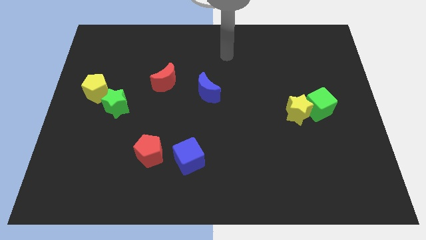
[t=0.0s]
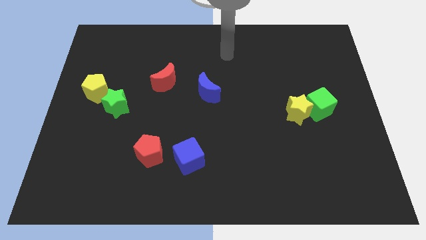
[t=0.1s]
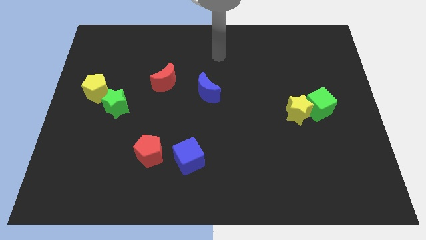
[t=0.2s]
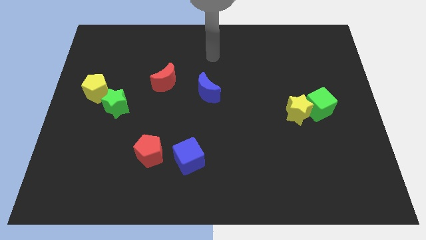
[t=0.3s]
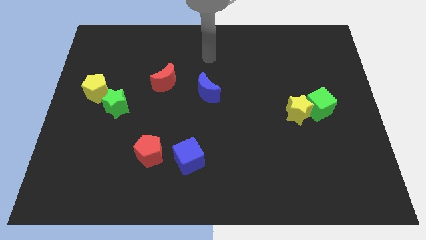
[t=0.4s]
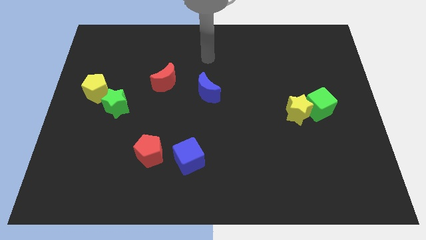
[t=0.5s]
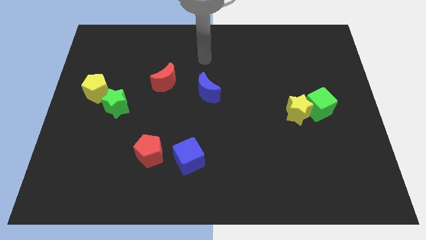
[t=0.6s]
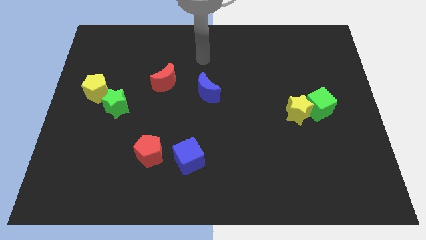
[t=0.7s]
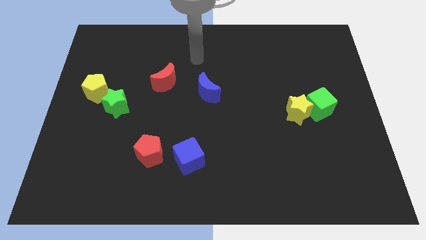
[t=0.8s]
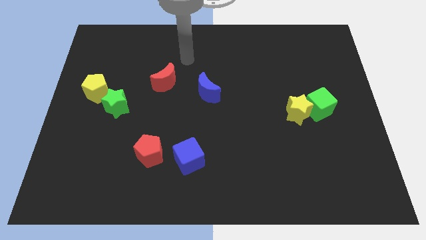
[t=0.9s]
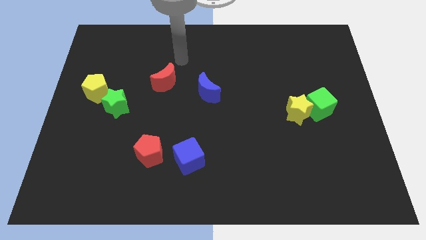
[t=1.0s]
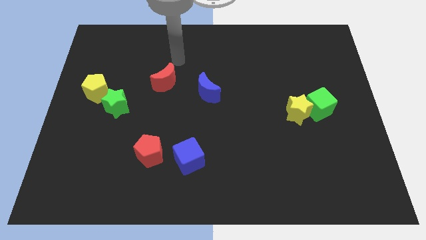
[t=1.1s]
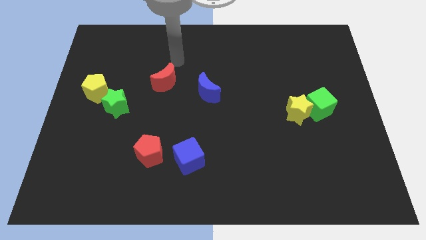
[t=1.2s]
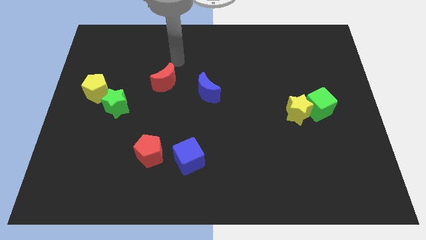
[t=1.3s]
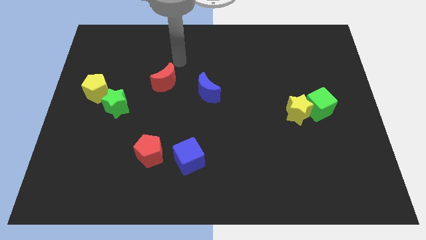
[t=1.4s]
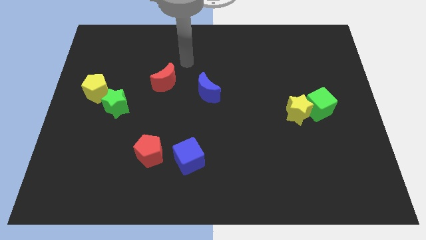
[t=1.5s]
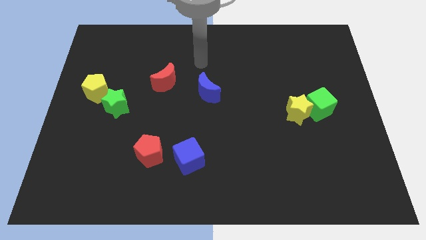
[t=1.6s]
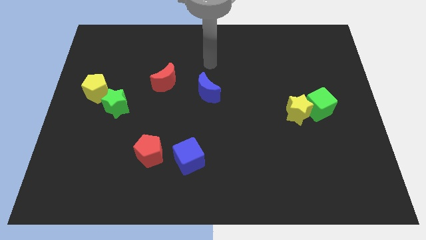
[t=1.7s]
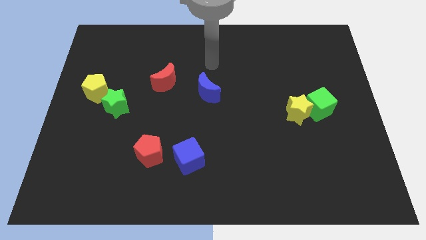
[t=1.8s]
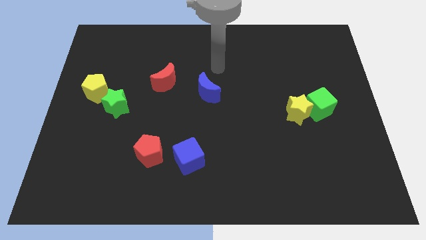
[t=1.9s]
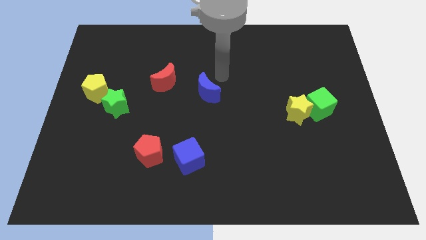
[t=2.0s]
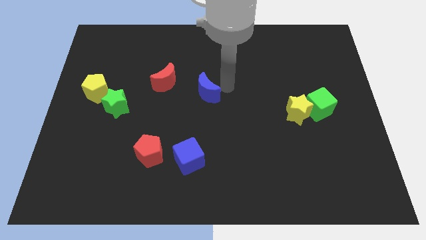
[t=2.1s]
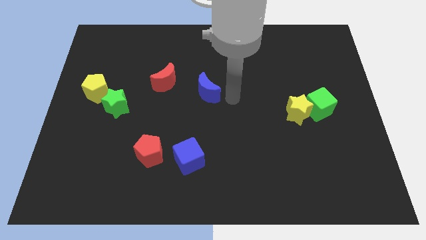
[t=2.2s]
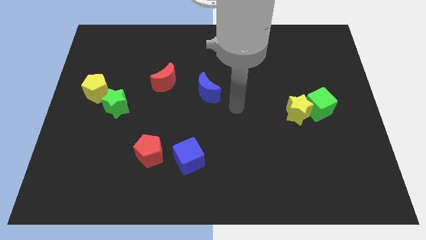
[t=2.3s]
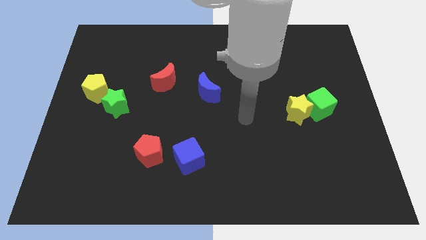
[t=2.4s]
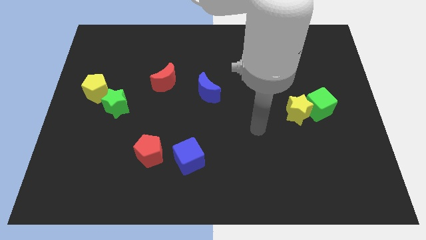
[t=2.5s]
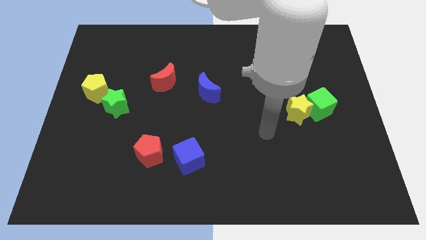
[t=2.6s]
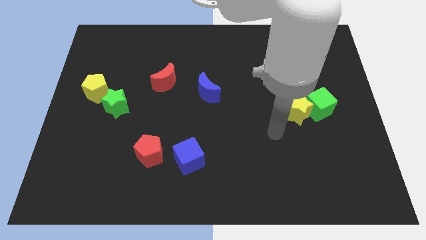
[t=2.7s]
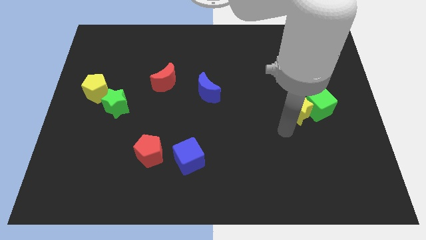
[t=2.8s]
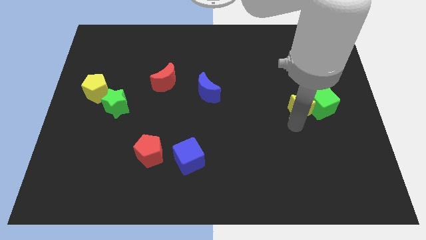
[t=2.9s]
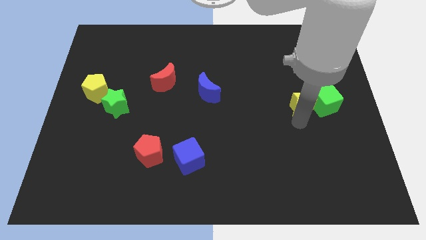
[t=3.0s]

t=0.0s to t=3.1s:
touch the bottom of the yellow star

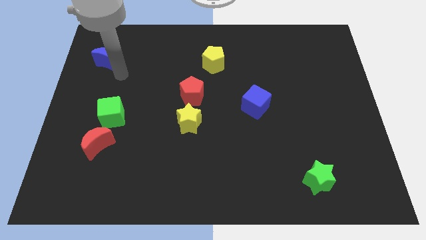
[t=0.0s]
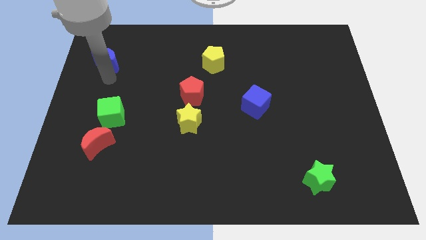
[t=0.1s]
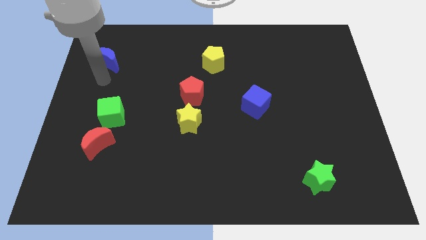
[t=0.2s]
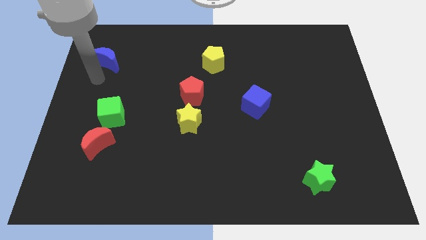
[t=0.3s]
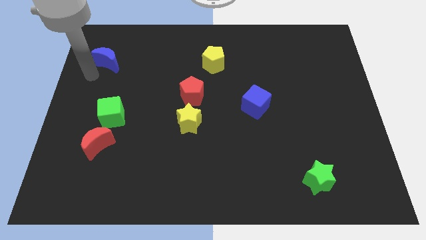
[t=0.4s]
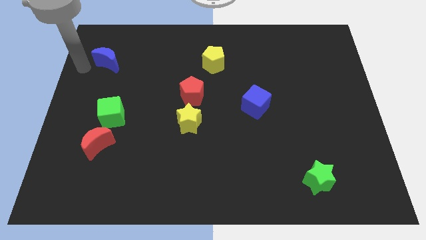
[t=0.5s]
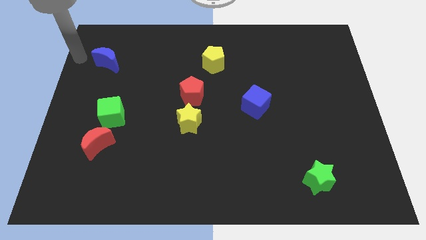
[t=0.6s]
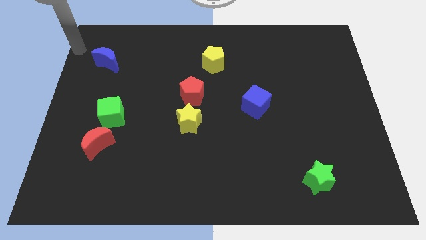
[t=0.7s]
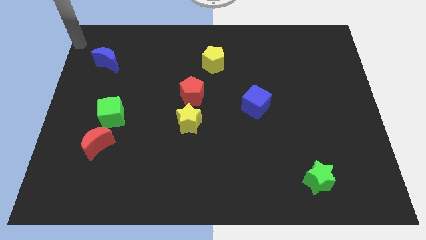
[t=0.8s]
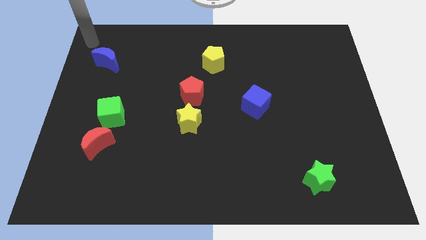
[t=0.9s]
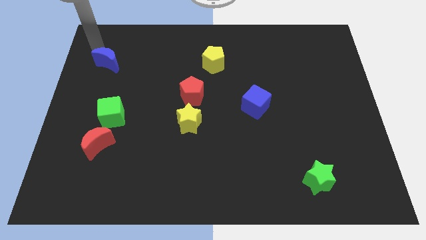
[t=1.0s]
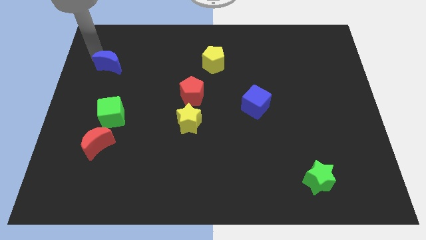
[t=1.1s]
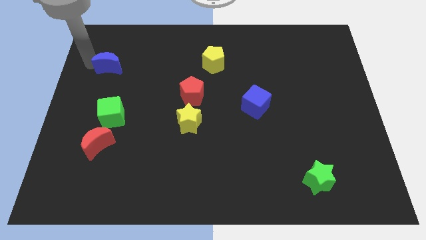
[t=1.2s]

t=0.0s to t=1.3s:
place the arm to the top of blue crescent

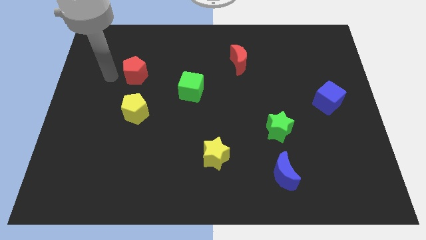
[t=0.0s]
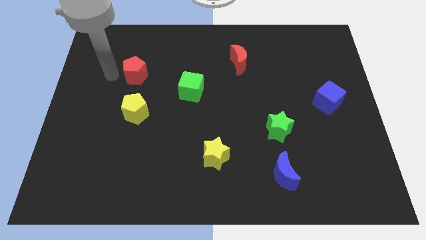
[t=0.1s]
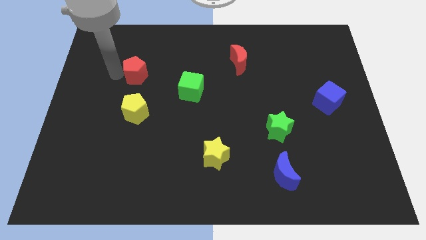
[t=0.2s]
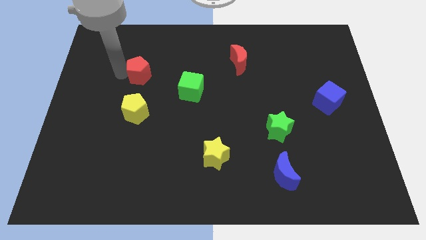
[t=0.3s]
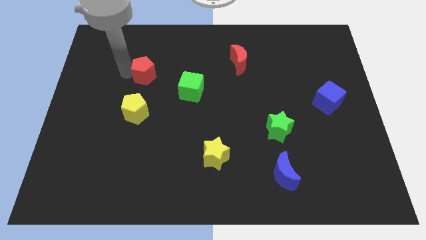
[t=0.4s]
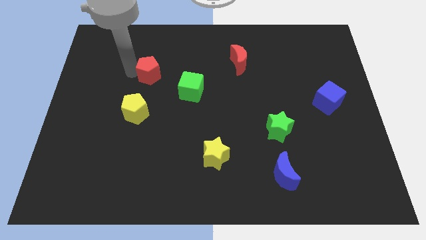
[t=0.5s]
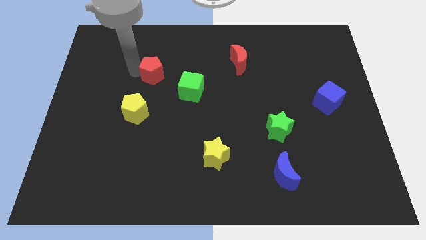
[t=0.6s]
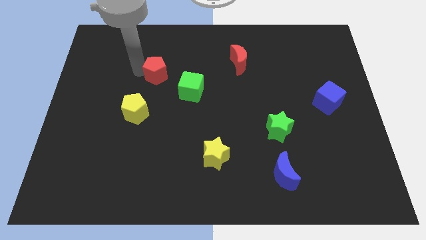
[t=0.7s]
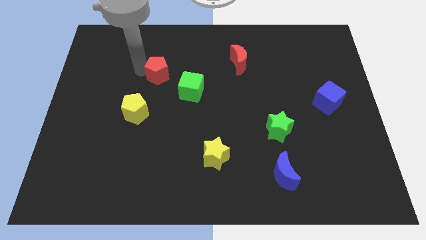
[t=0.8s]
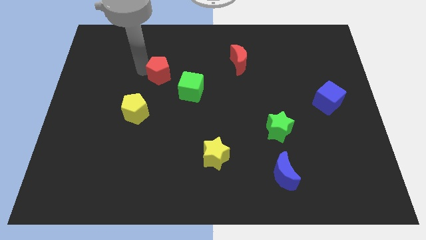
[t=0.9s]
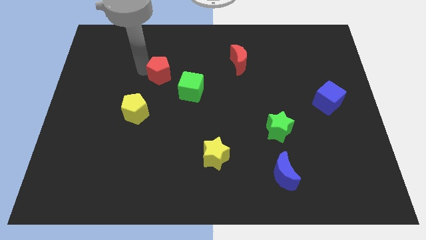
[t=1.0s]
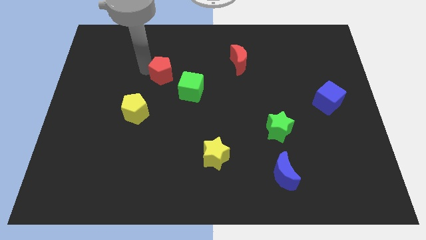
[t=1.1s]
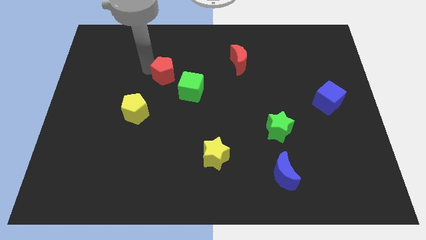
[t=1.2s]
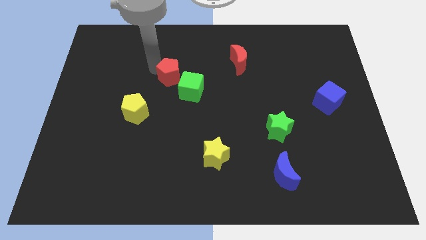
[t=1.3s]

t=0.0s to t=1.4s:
place the red pentagon to the top left of the green cube

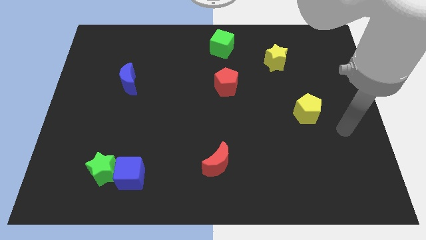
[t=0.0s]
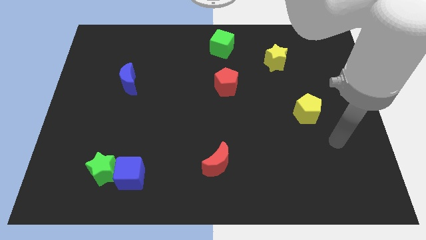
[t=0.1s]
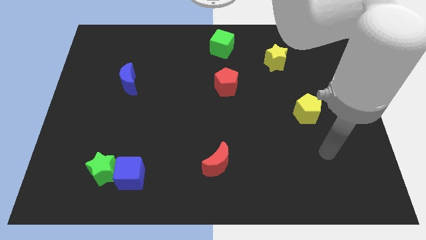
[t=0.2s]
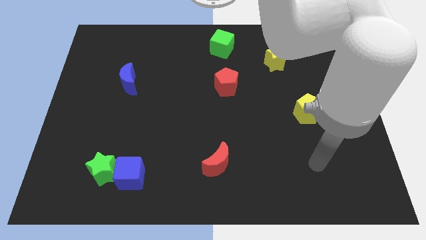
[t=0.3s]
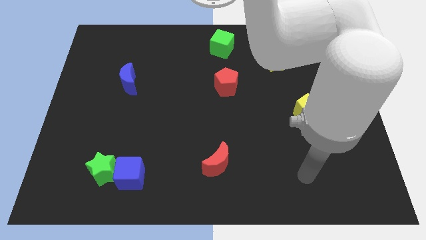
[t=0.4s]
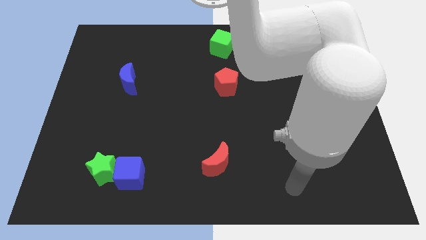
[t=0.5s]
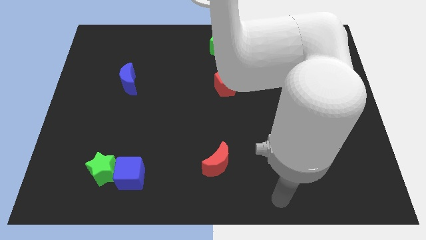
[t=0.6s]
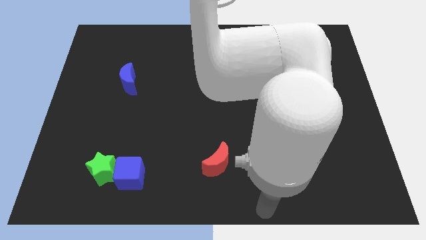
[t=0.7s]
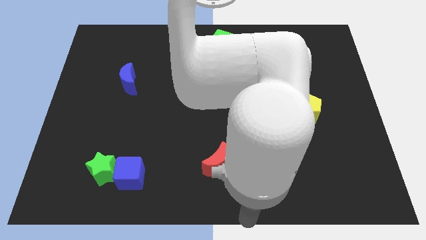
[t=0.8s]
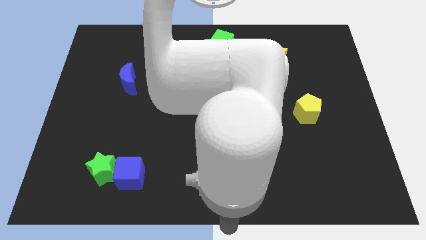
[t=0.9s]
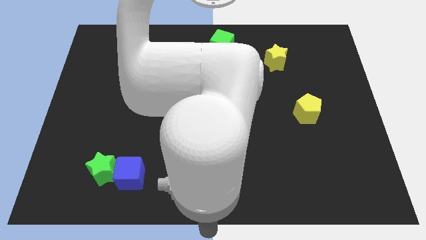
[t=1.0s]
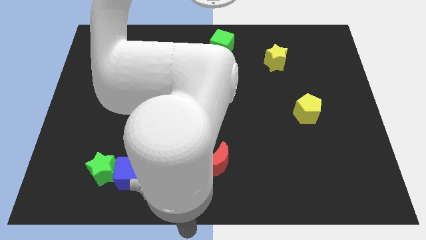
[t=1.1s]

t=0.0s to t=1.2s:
go to the bottom center of the table

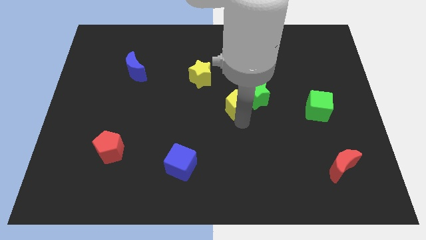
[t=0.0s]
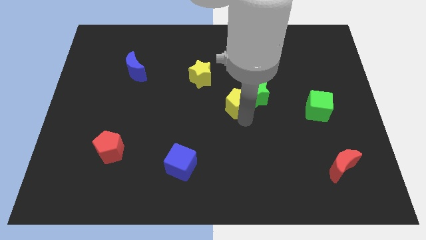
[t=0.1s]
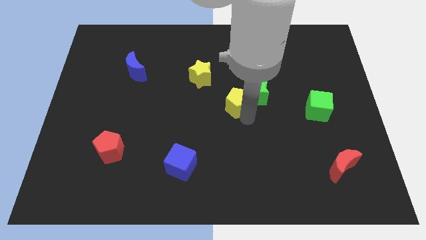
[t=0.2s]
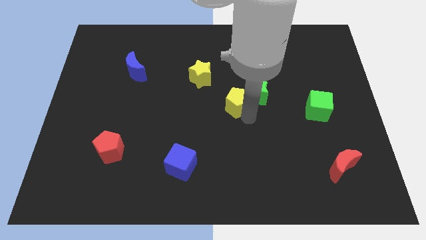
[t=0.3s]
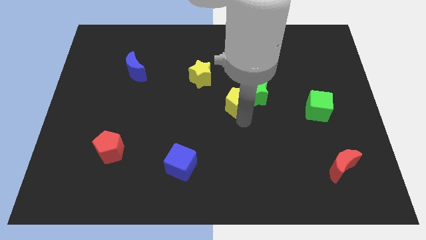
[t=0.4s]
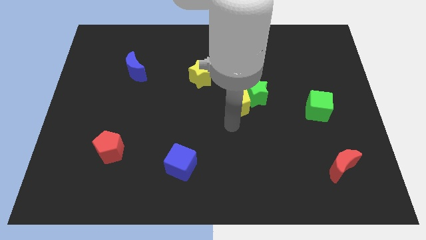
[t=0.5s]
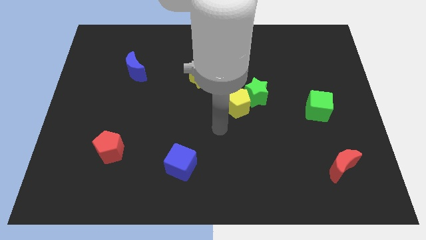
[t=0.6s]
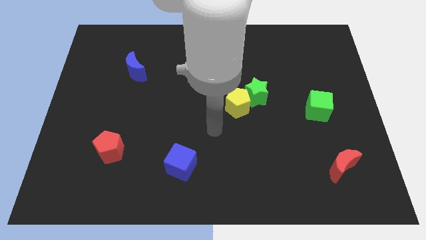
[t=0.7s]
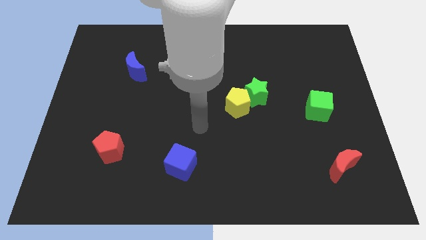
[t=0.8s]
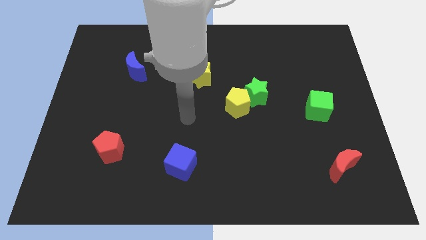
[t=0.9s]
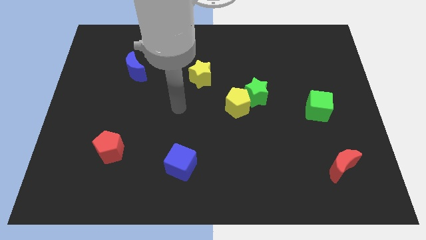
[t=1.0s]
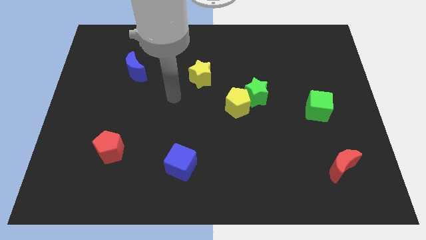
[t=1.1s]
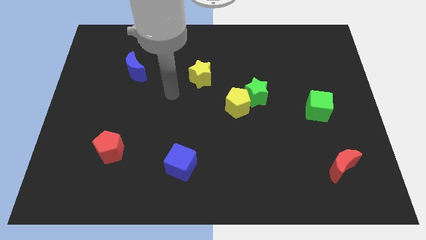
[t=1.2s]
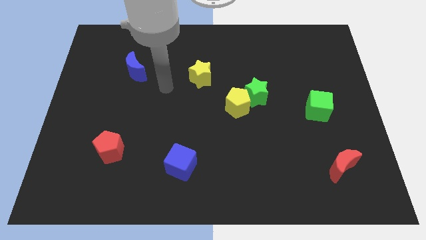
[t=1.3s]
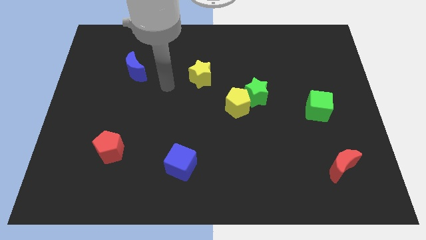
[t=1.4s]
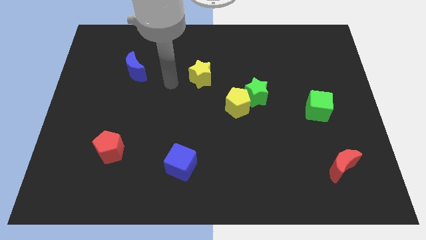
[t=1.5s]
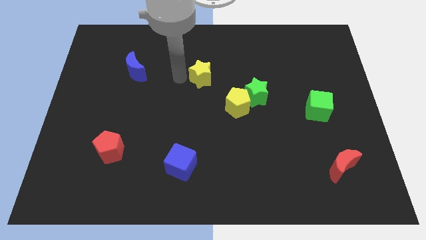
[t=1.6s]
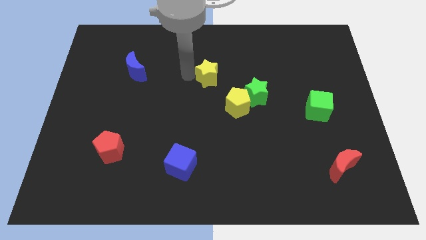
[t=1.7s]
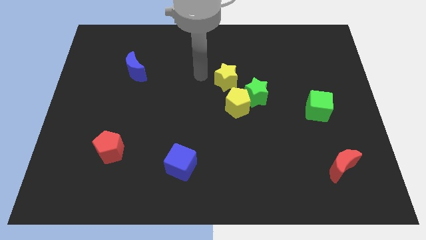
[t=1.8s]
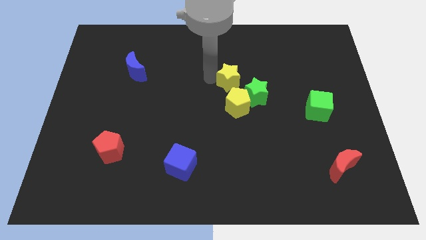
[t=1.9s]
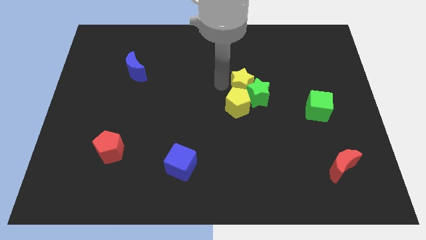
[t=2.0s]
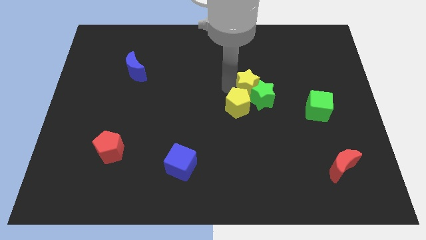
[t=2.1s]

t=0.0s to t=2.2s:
place the yellow star above the yellow pentagon
